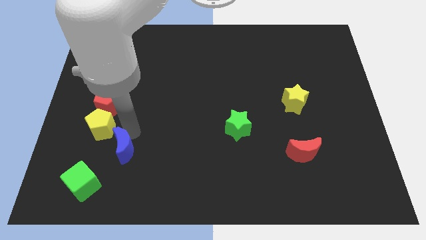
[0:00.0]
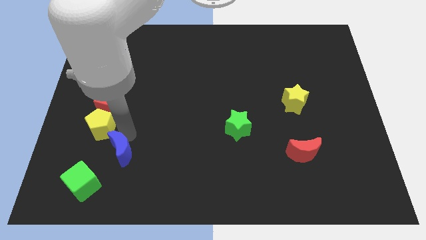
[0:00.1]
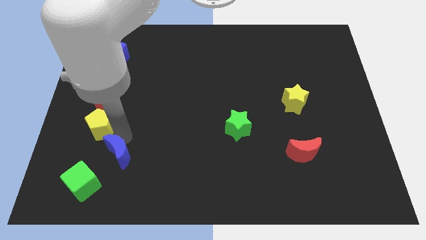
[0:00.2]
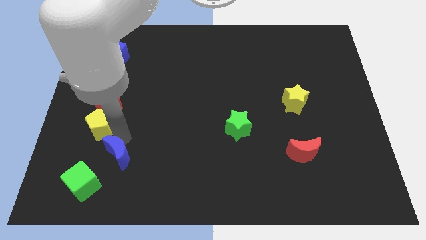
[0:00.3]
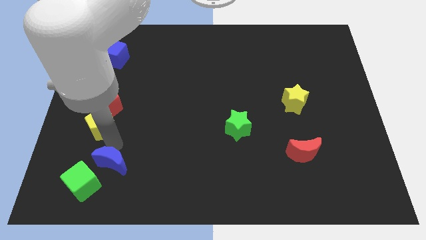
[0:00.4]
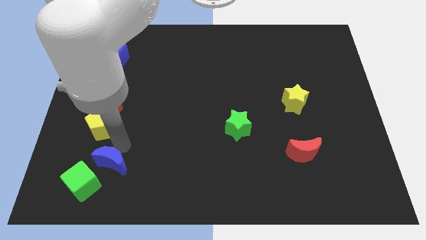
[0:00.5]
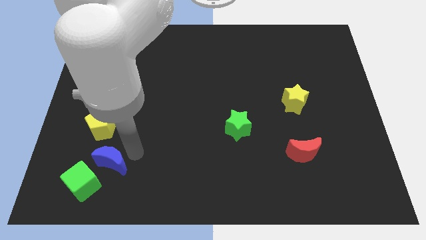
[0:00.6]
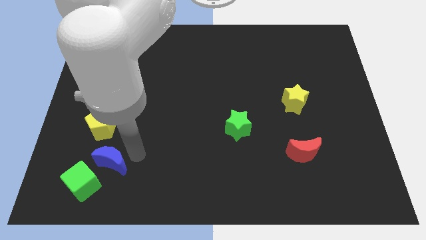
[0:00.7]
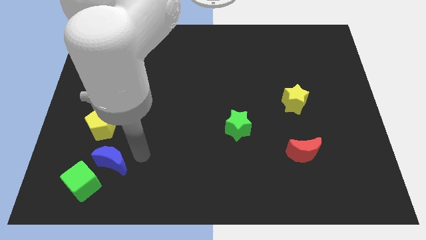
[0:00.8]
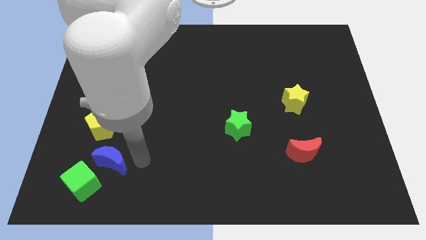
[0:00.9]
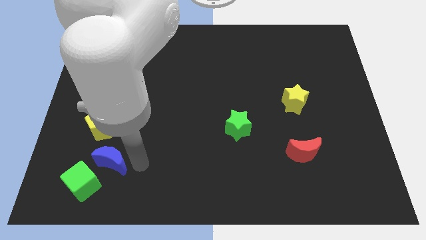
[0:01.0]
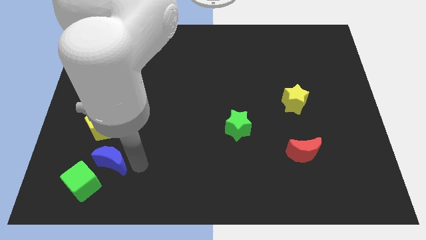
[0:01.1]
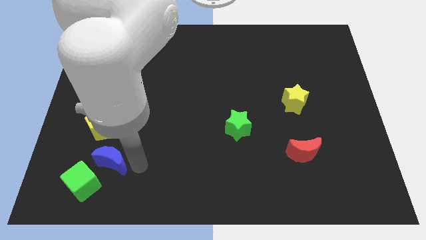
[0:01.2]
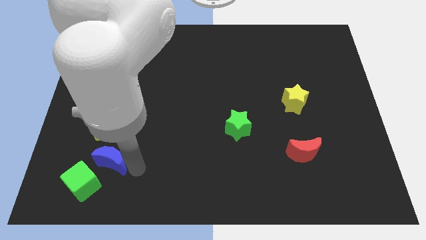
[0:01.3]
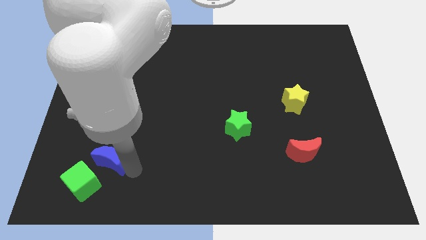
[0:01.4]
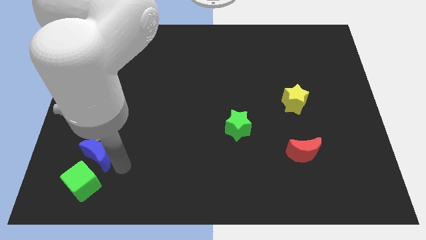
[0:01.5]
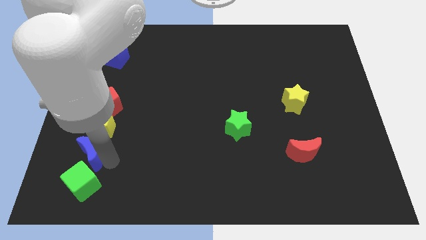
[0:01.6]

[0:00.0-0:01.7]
place the blue crescent vertically in between the green cube and yellow pentagon

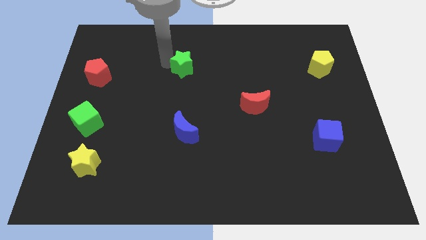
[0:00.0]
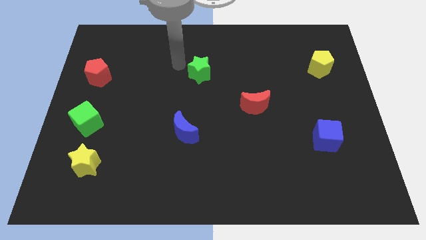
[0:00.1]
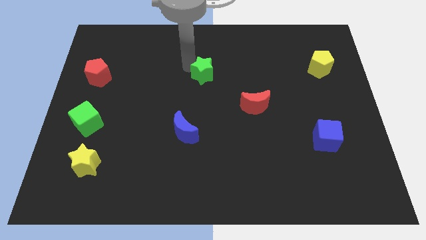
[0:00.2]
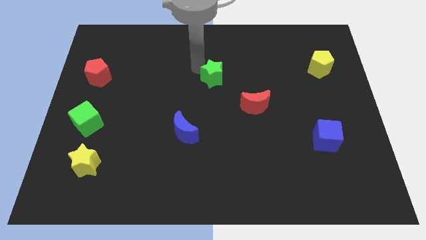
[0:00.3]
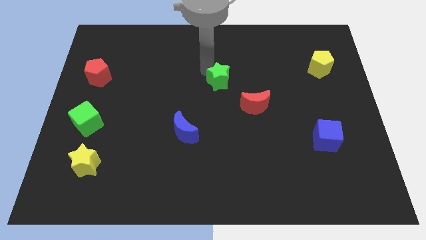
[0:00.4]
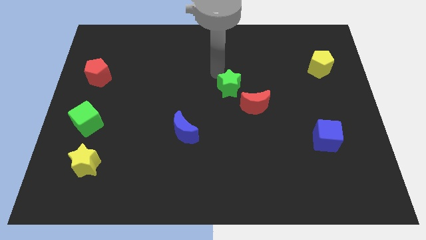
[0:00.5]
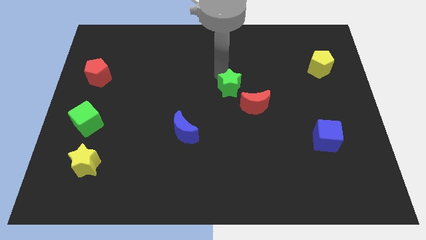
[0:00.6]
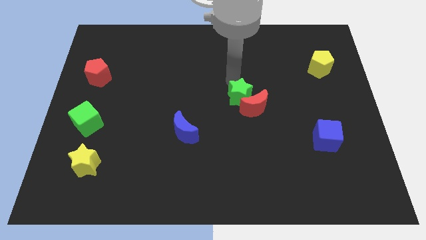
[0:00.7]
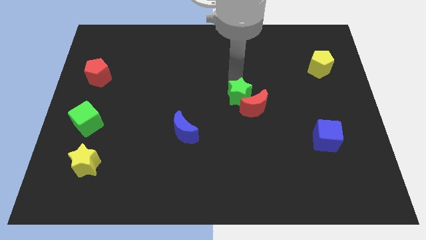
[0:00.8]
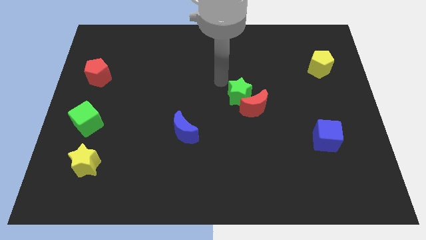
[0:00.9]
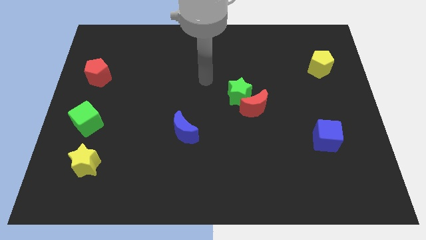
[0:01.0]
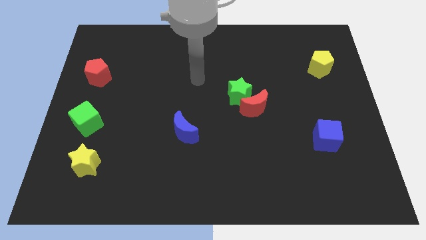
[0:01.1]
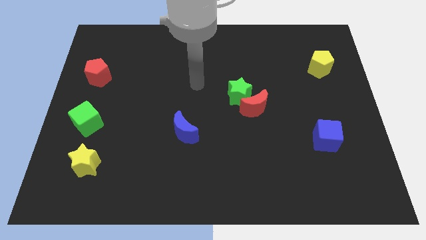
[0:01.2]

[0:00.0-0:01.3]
push the green star into the red crescent

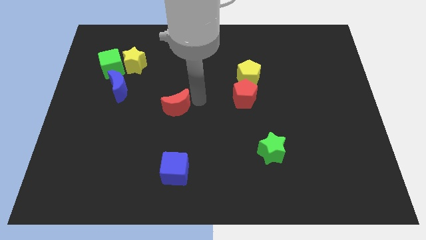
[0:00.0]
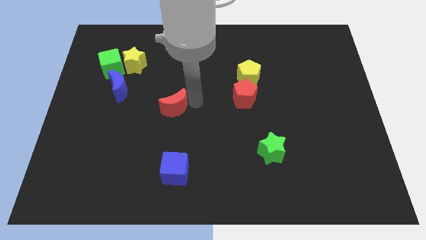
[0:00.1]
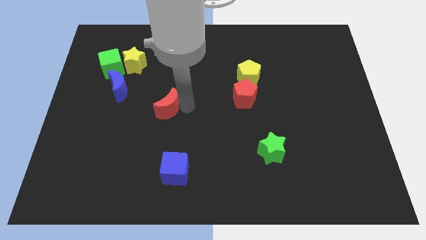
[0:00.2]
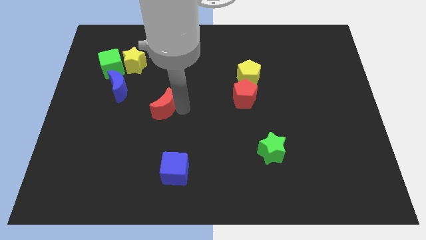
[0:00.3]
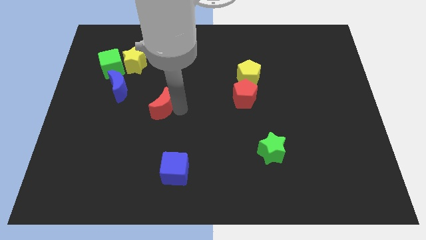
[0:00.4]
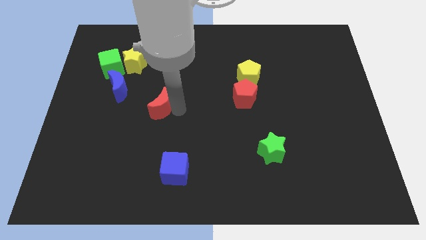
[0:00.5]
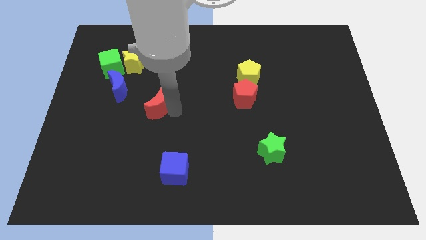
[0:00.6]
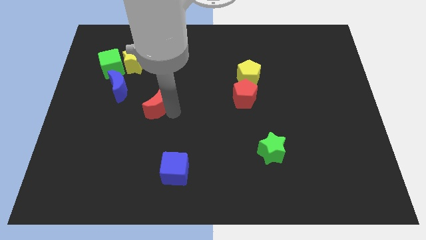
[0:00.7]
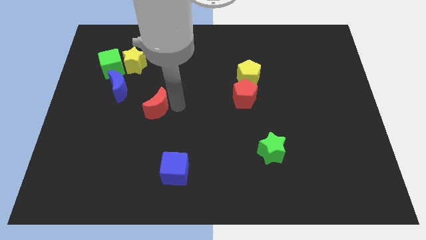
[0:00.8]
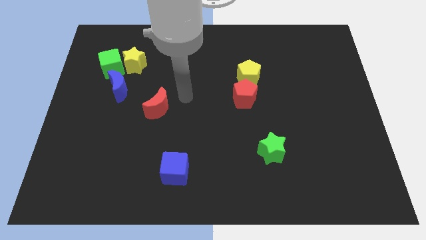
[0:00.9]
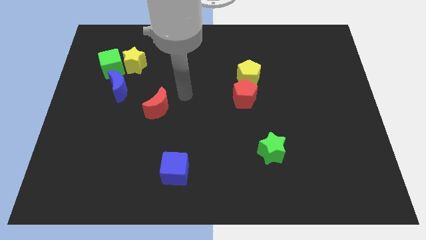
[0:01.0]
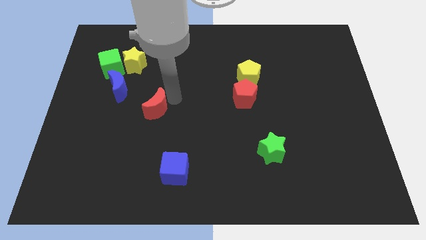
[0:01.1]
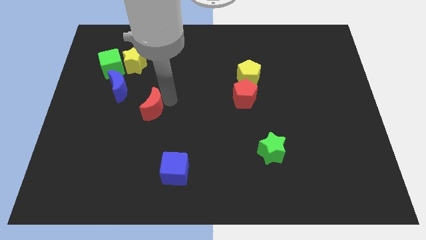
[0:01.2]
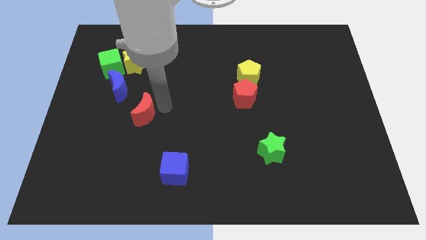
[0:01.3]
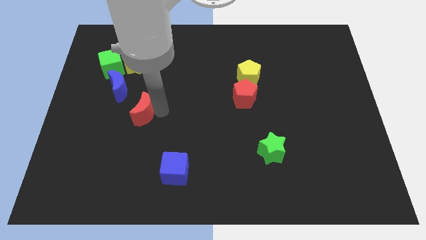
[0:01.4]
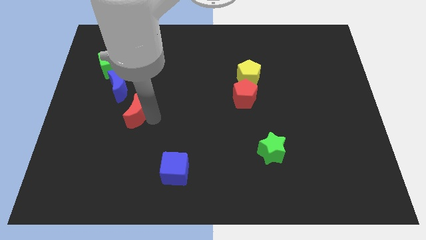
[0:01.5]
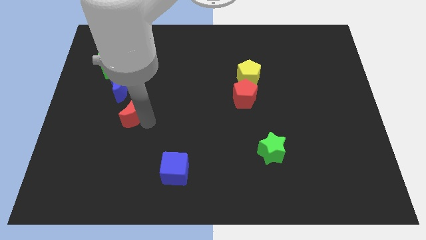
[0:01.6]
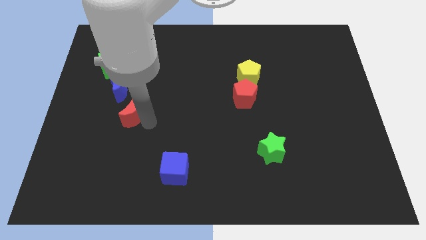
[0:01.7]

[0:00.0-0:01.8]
move the red crescent diagonal to the blue cube

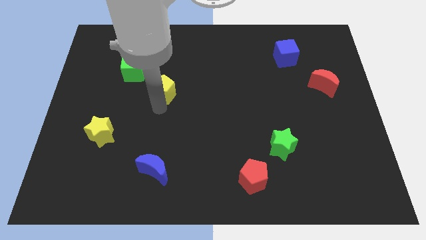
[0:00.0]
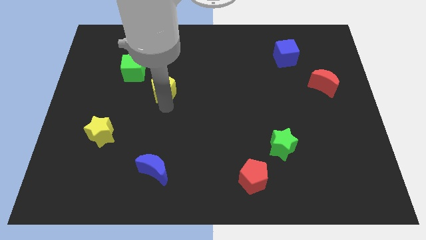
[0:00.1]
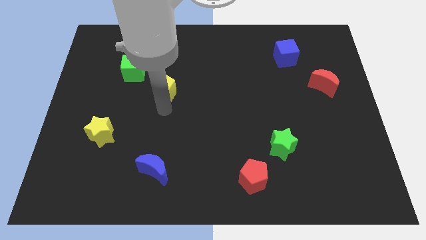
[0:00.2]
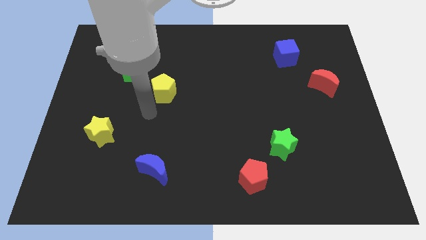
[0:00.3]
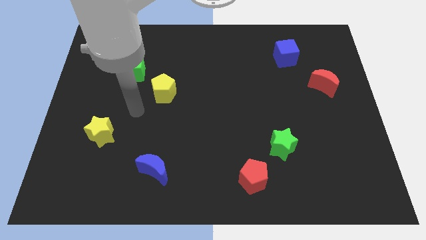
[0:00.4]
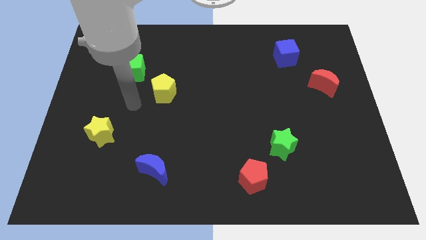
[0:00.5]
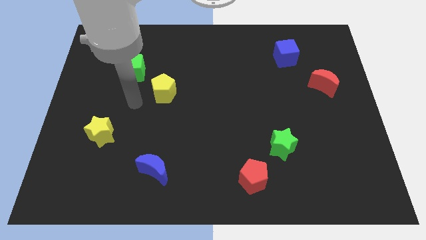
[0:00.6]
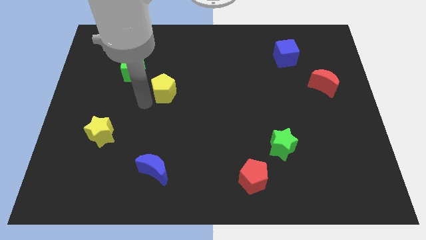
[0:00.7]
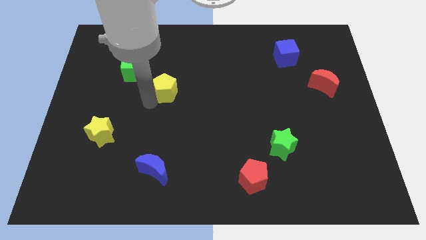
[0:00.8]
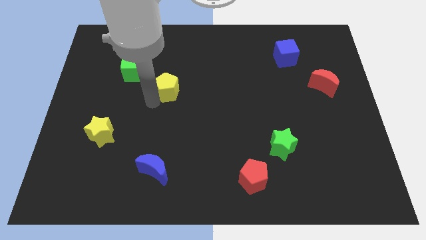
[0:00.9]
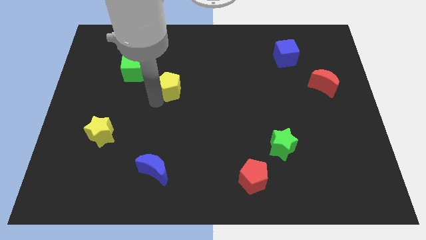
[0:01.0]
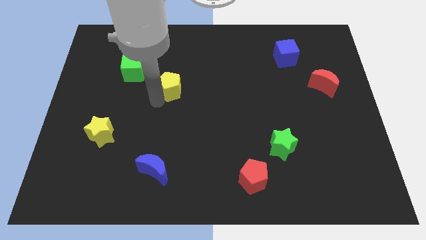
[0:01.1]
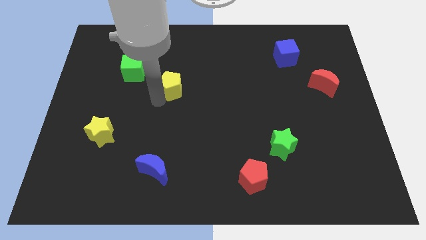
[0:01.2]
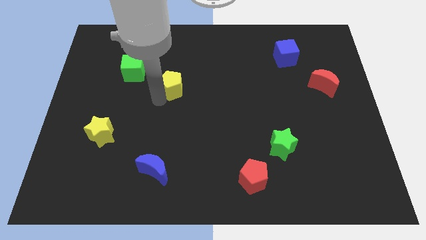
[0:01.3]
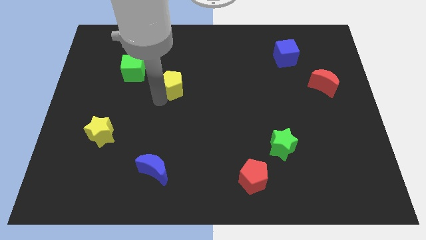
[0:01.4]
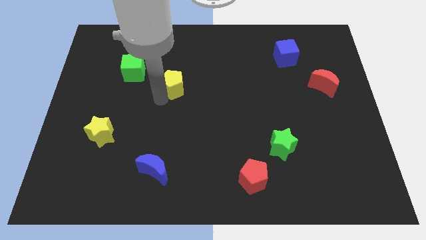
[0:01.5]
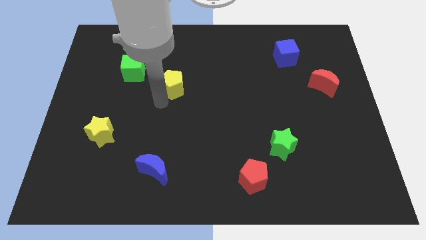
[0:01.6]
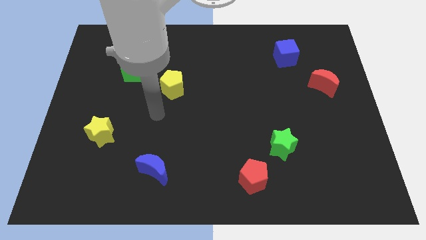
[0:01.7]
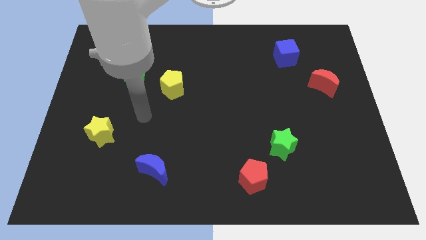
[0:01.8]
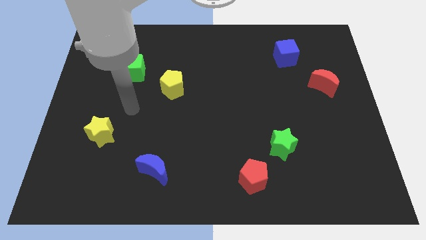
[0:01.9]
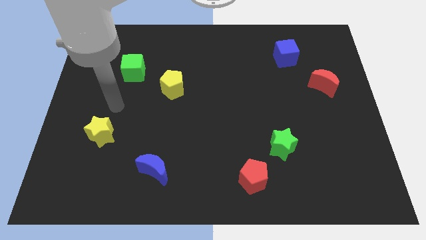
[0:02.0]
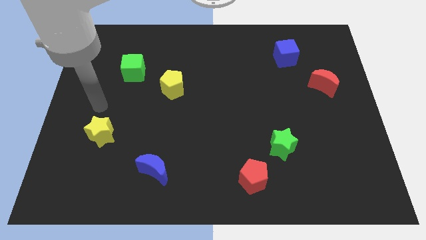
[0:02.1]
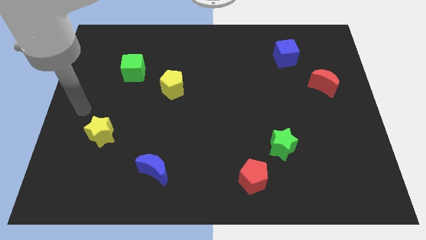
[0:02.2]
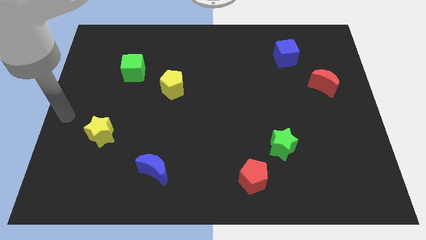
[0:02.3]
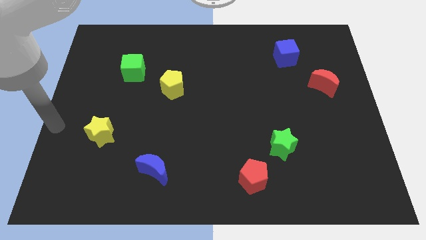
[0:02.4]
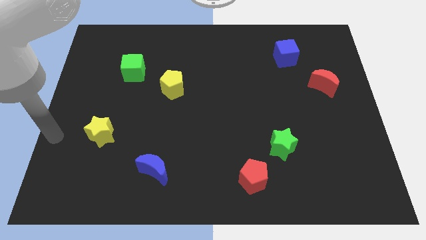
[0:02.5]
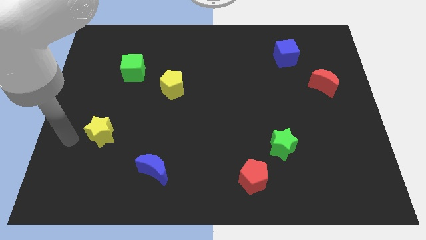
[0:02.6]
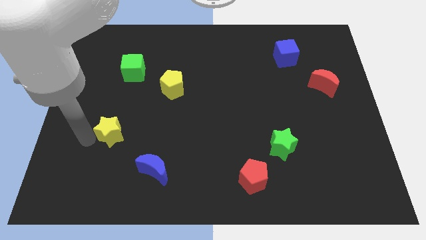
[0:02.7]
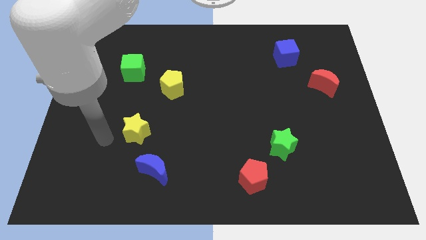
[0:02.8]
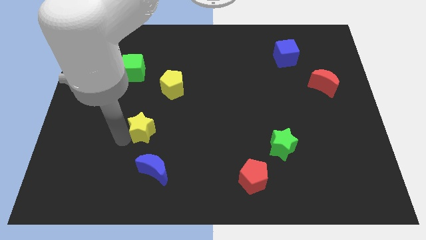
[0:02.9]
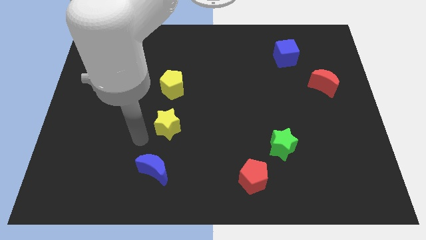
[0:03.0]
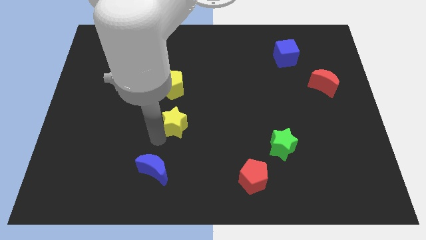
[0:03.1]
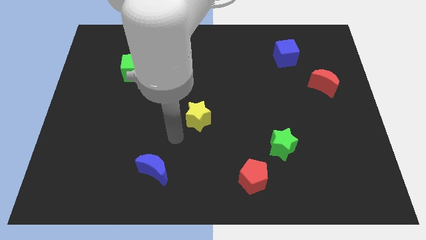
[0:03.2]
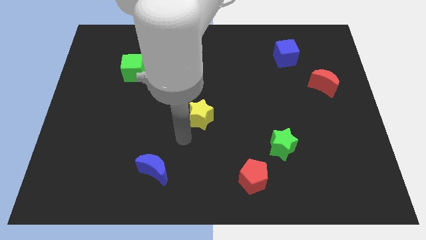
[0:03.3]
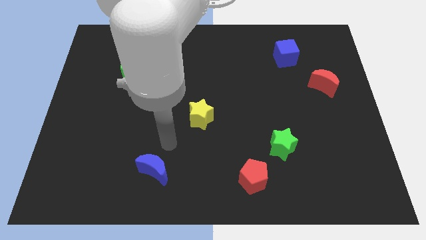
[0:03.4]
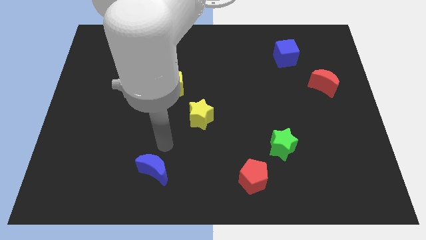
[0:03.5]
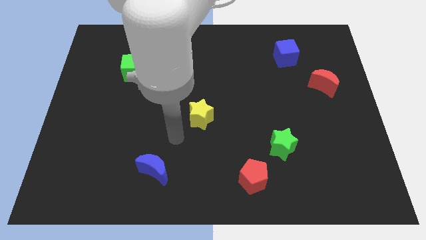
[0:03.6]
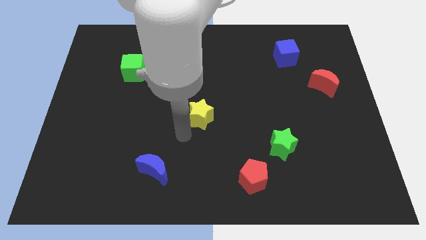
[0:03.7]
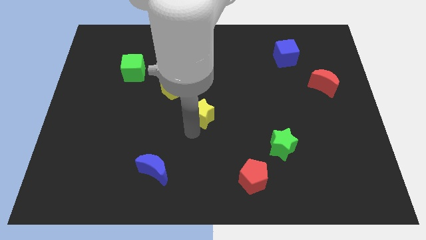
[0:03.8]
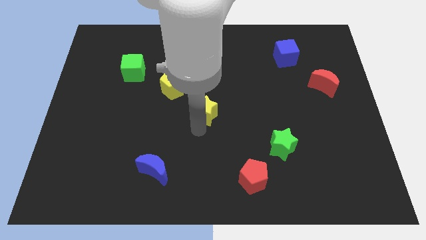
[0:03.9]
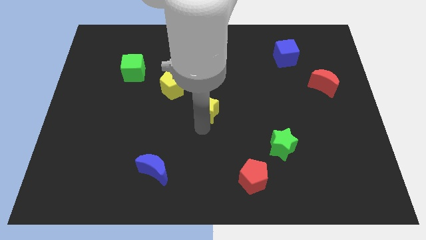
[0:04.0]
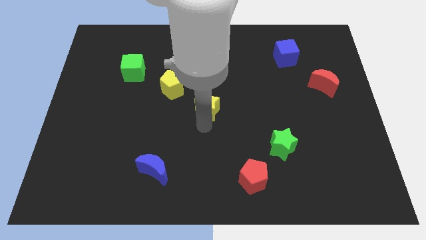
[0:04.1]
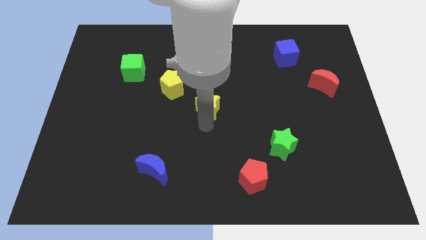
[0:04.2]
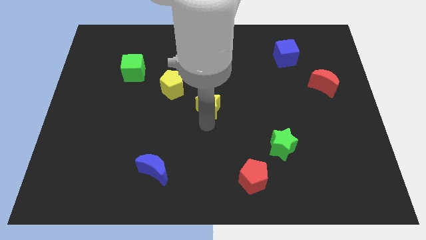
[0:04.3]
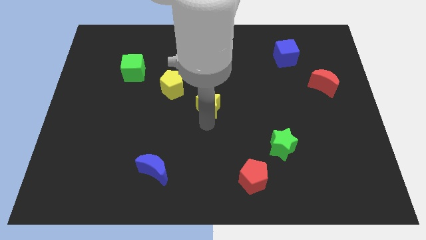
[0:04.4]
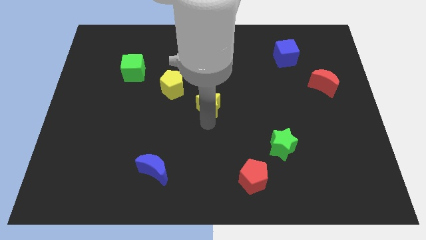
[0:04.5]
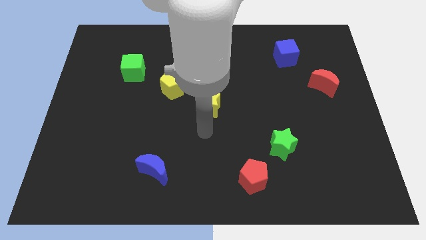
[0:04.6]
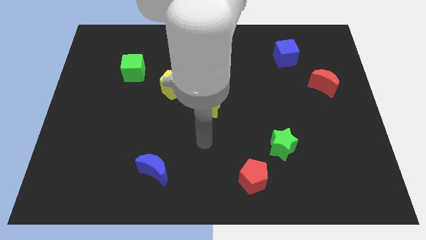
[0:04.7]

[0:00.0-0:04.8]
place yellow star at the center
